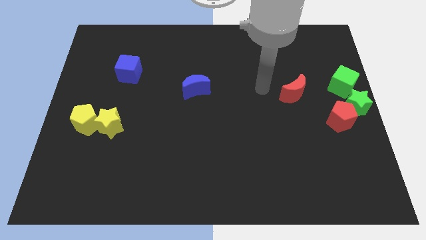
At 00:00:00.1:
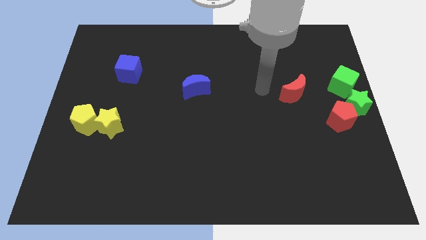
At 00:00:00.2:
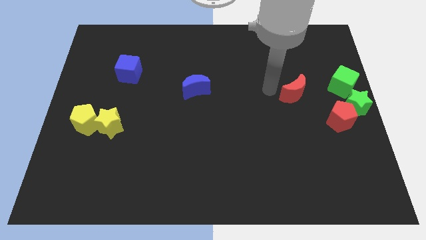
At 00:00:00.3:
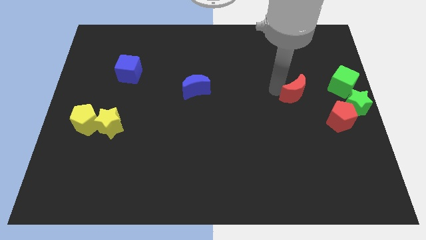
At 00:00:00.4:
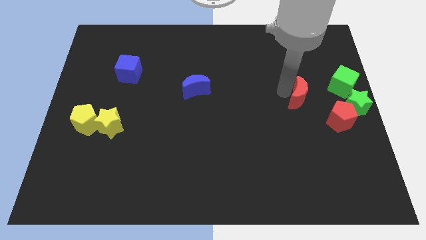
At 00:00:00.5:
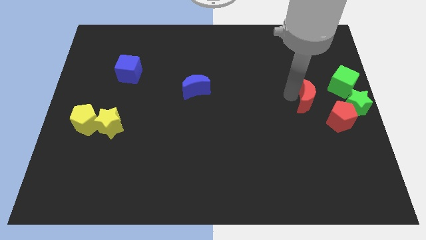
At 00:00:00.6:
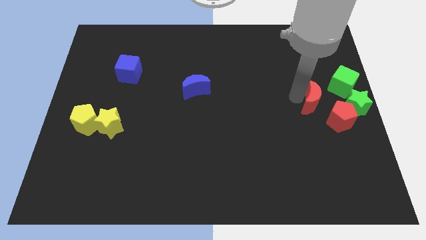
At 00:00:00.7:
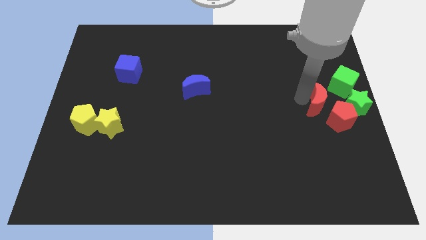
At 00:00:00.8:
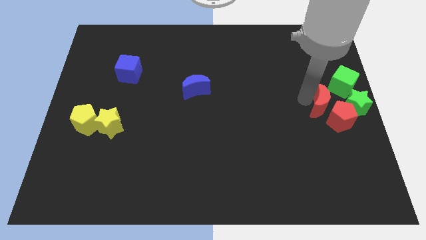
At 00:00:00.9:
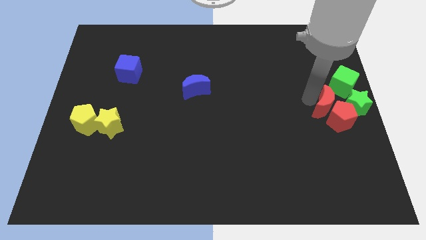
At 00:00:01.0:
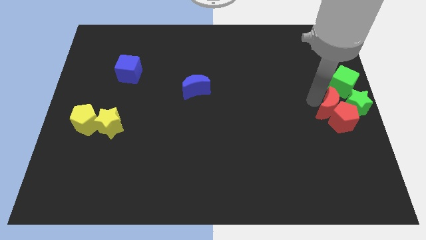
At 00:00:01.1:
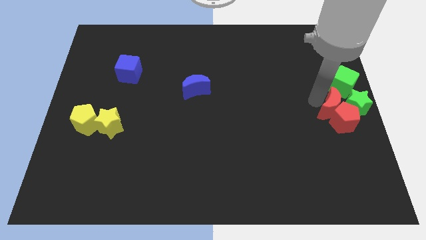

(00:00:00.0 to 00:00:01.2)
place red moon above the red pentagon

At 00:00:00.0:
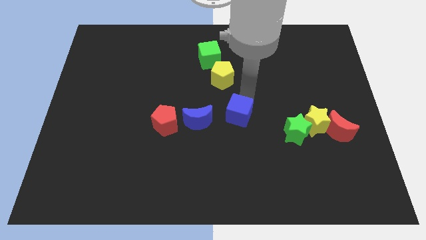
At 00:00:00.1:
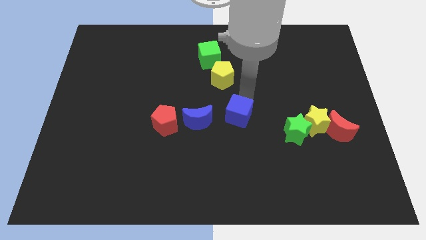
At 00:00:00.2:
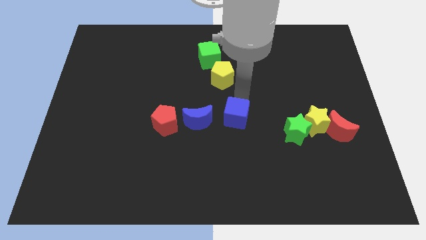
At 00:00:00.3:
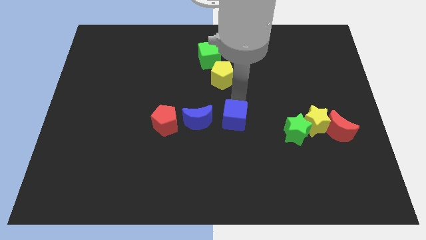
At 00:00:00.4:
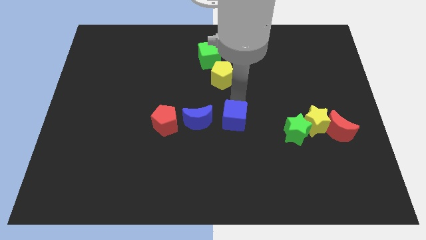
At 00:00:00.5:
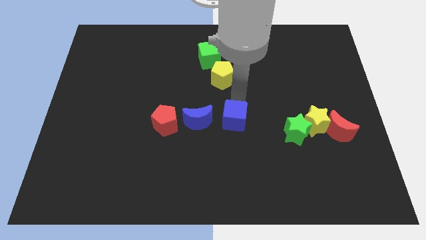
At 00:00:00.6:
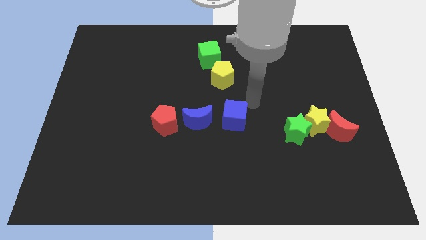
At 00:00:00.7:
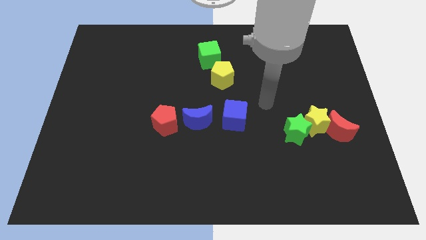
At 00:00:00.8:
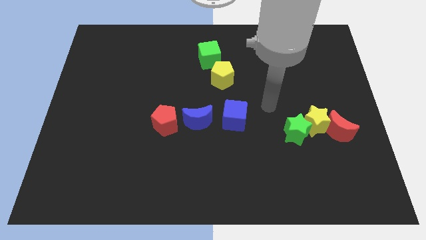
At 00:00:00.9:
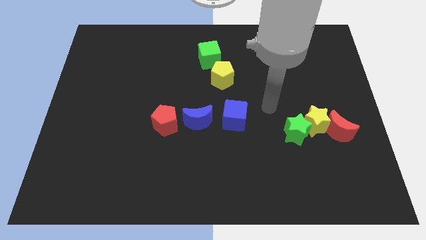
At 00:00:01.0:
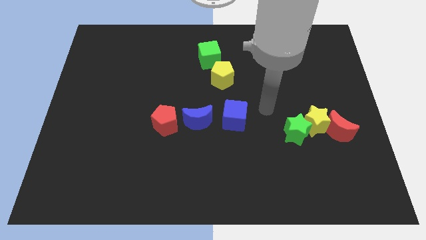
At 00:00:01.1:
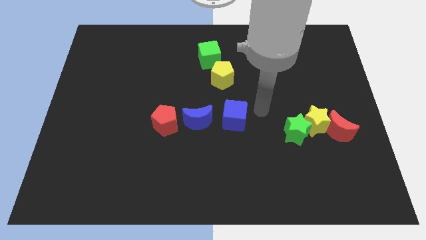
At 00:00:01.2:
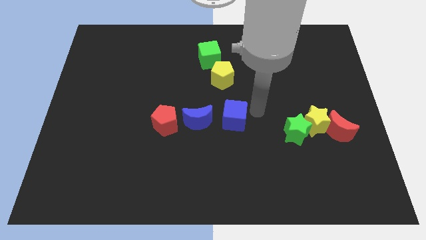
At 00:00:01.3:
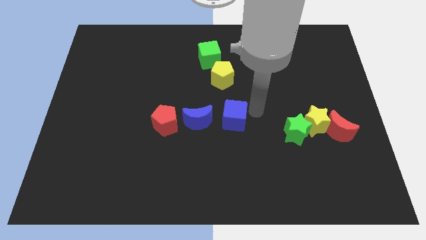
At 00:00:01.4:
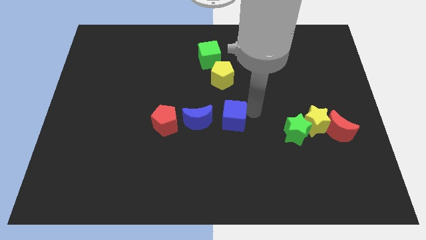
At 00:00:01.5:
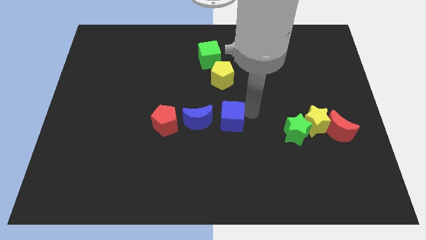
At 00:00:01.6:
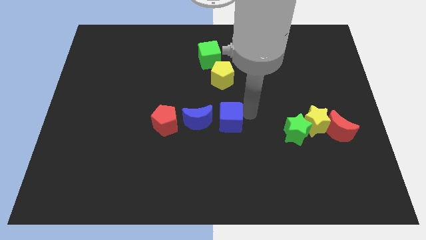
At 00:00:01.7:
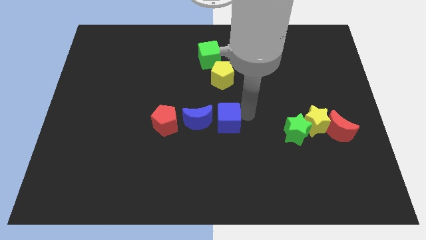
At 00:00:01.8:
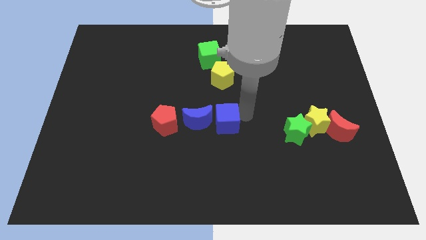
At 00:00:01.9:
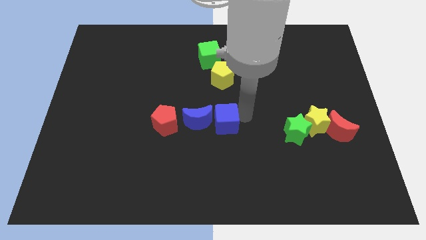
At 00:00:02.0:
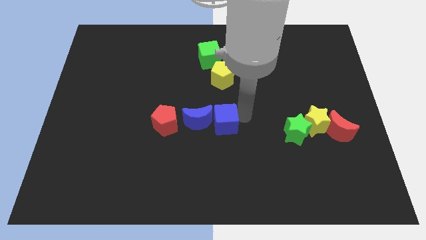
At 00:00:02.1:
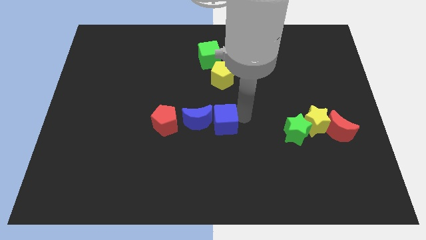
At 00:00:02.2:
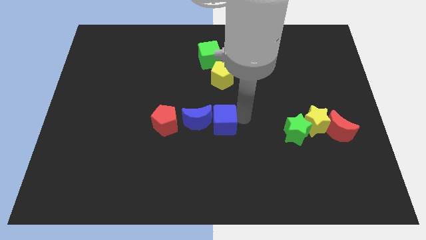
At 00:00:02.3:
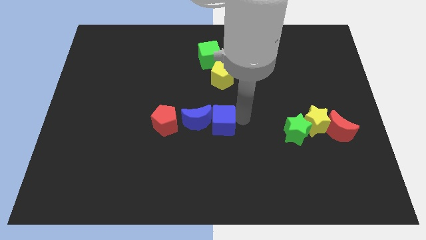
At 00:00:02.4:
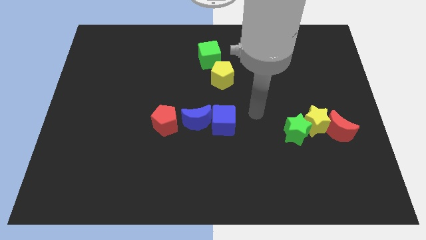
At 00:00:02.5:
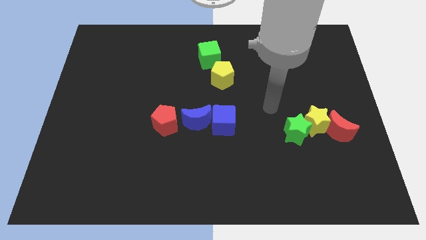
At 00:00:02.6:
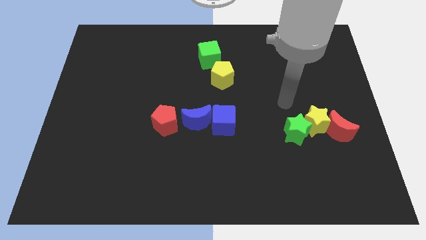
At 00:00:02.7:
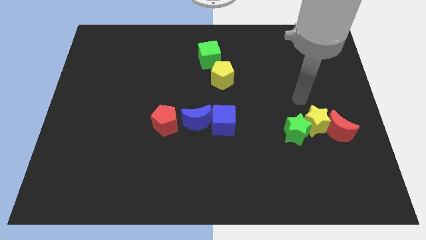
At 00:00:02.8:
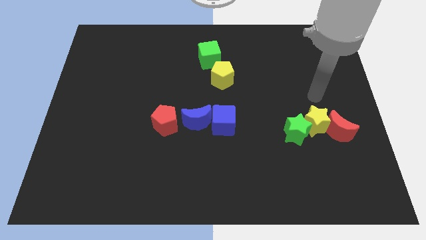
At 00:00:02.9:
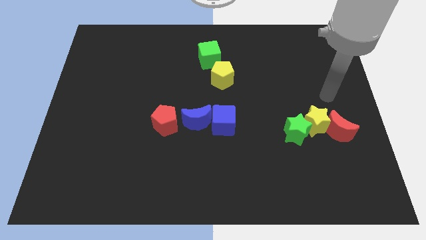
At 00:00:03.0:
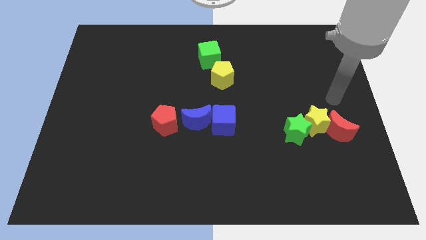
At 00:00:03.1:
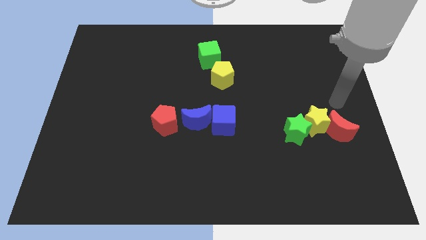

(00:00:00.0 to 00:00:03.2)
move blue cube close to blue moon

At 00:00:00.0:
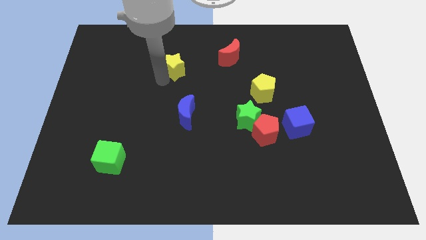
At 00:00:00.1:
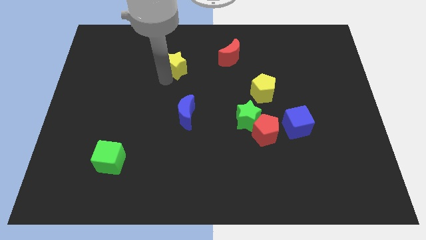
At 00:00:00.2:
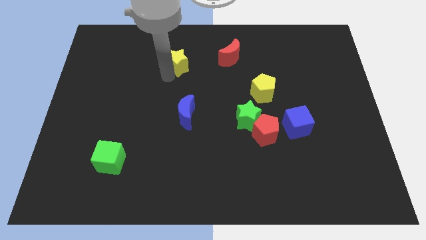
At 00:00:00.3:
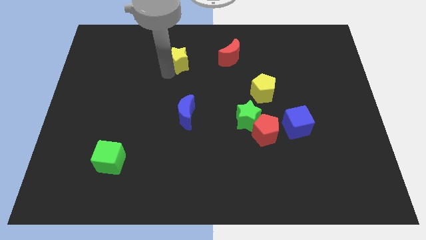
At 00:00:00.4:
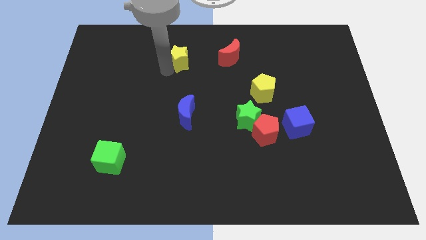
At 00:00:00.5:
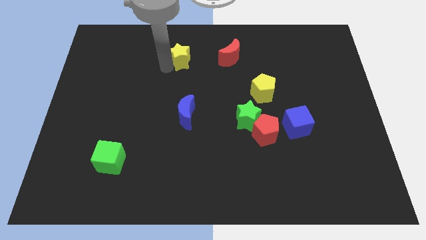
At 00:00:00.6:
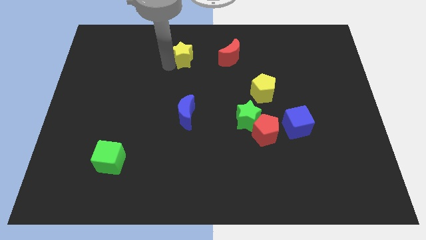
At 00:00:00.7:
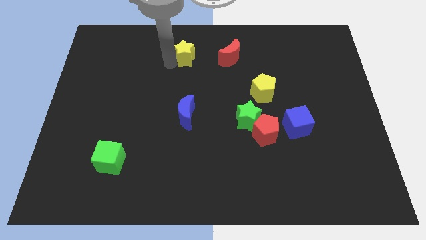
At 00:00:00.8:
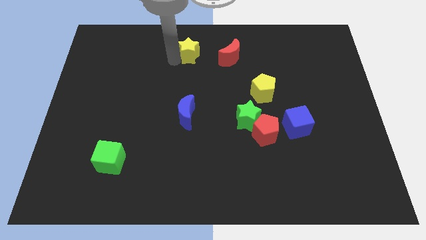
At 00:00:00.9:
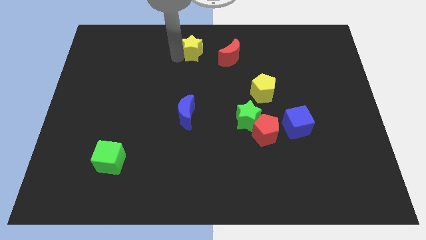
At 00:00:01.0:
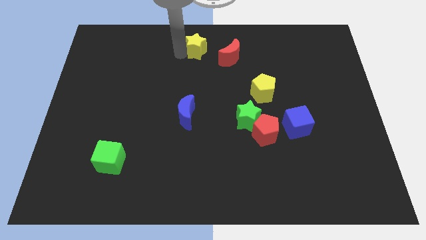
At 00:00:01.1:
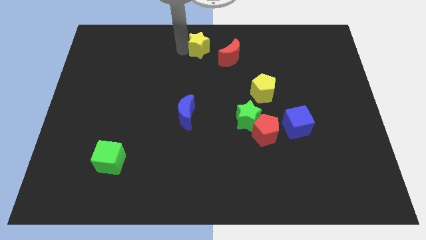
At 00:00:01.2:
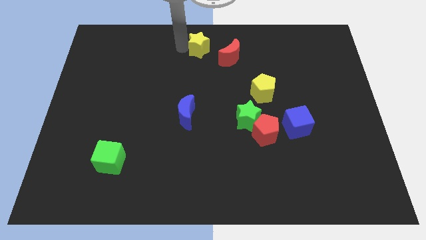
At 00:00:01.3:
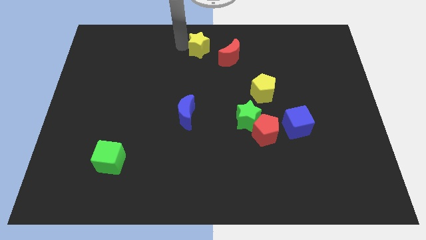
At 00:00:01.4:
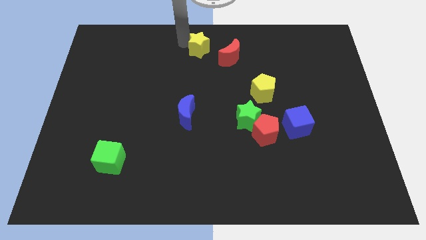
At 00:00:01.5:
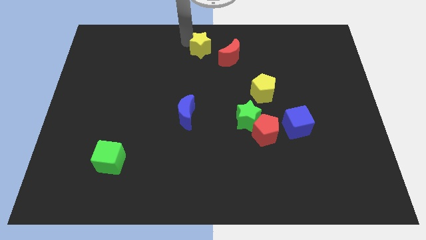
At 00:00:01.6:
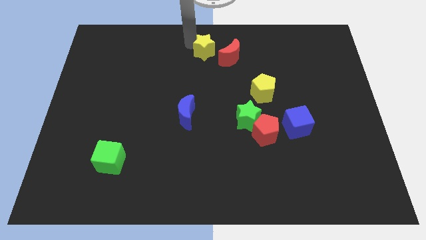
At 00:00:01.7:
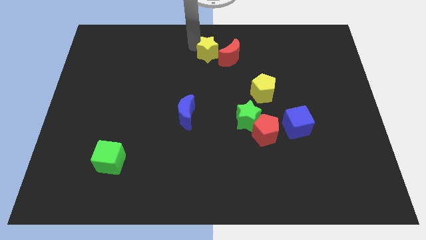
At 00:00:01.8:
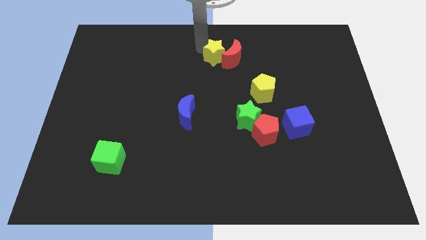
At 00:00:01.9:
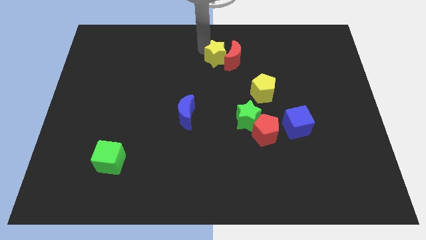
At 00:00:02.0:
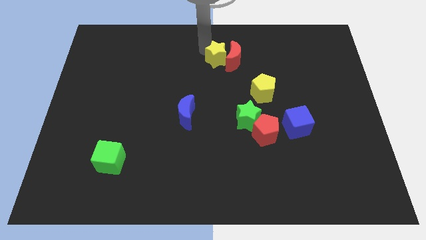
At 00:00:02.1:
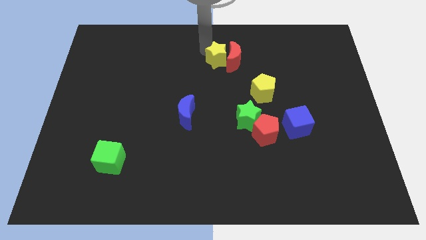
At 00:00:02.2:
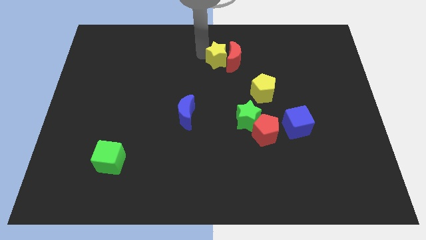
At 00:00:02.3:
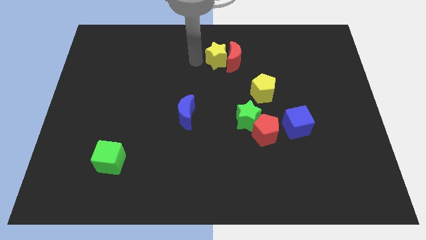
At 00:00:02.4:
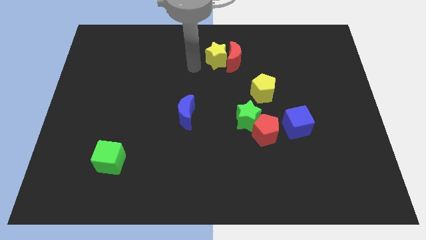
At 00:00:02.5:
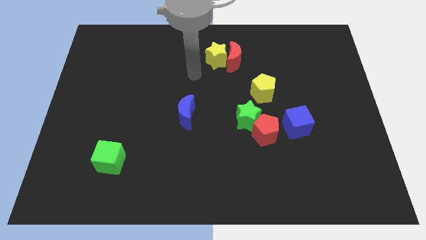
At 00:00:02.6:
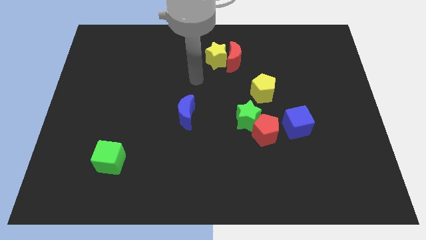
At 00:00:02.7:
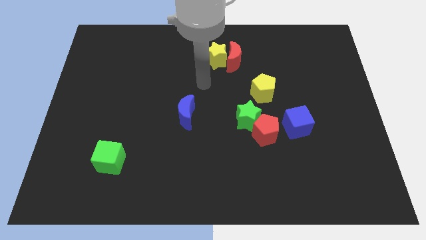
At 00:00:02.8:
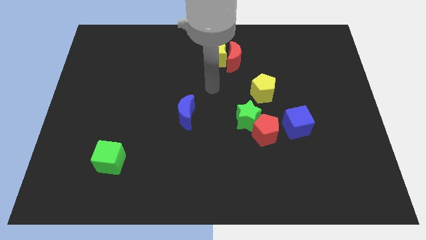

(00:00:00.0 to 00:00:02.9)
move the yellow star on the left side of the red crescent

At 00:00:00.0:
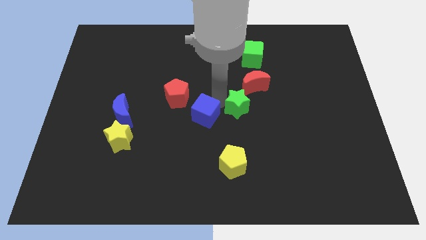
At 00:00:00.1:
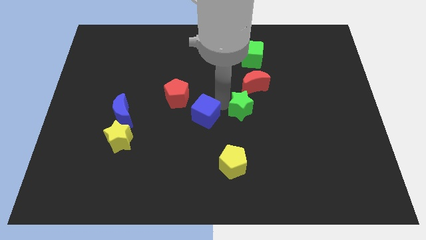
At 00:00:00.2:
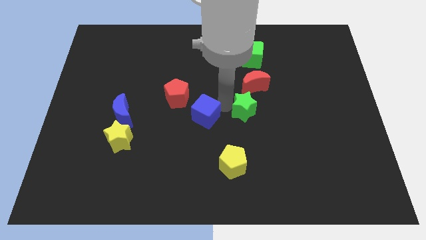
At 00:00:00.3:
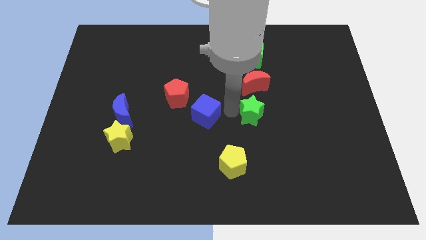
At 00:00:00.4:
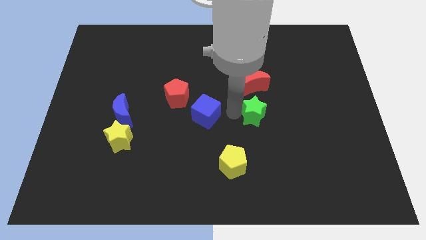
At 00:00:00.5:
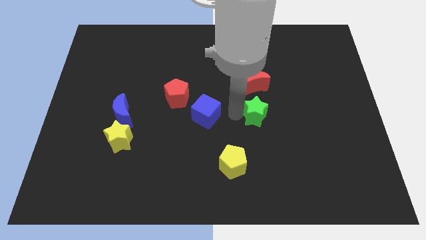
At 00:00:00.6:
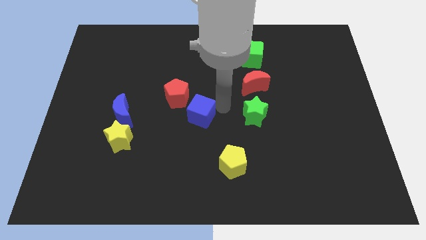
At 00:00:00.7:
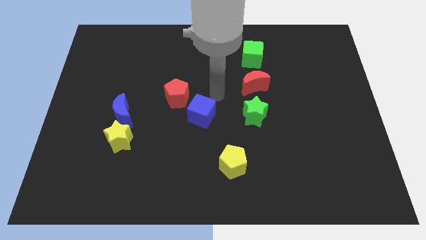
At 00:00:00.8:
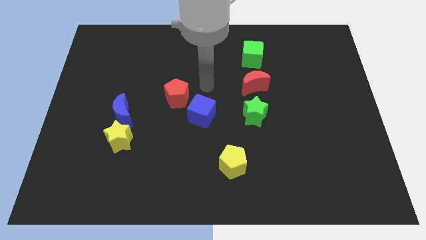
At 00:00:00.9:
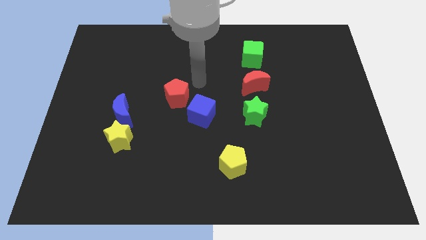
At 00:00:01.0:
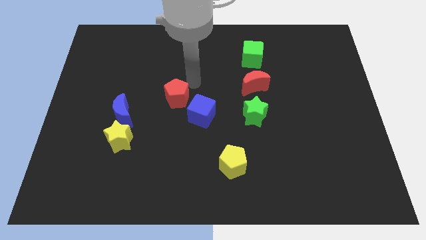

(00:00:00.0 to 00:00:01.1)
separate the green star from the blue cube

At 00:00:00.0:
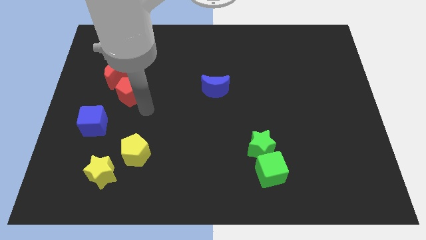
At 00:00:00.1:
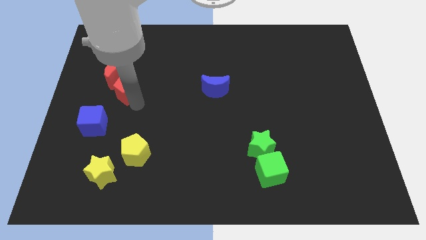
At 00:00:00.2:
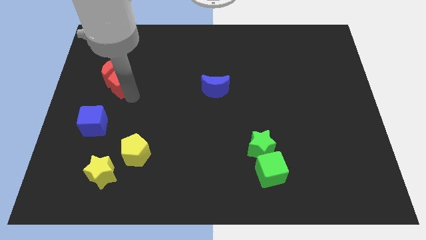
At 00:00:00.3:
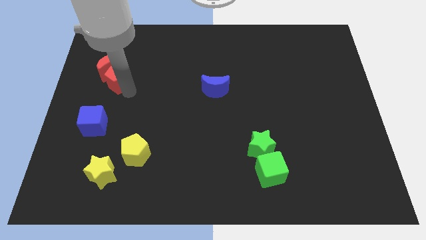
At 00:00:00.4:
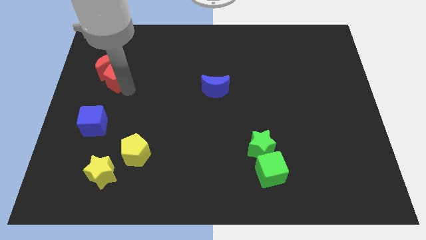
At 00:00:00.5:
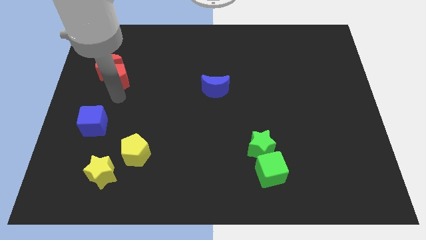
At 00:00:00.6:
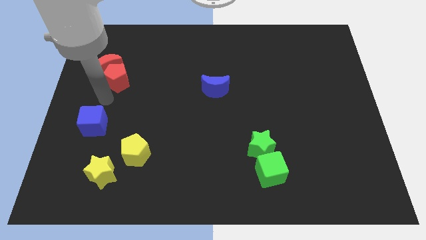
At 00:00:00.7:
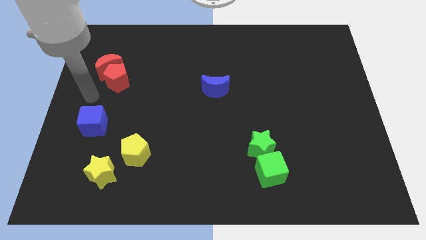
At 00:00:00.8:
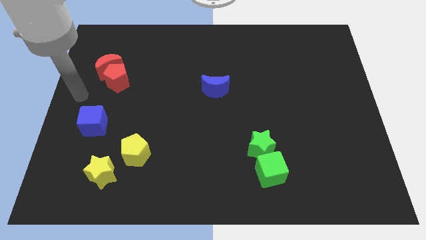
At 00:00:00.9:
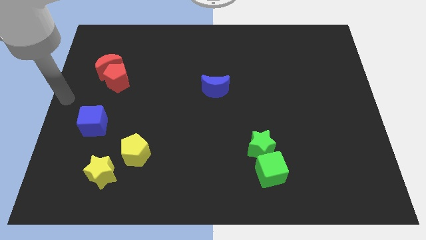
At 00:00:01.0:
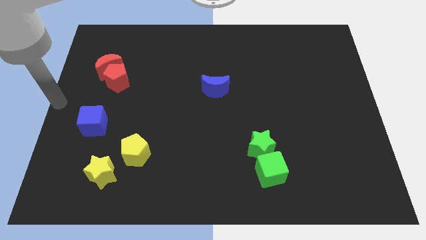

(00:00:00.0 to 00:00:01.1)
push the red pentagon into the red crescent
